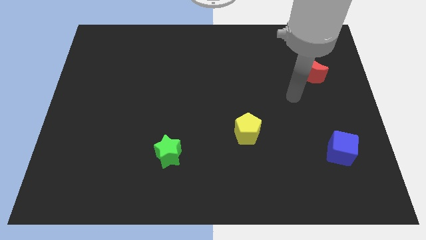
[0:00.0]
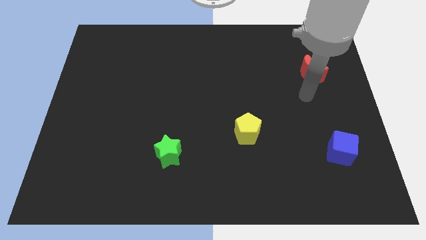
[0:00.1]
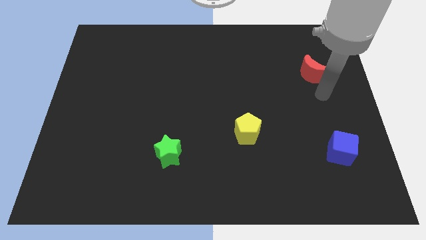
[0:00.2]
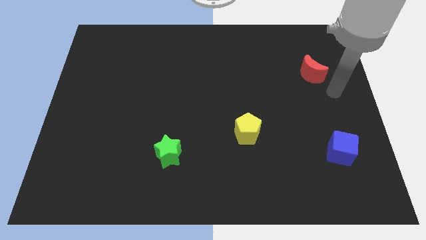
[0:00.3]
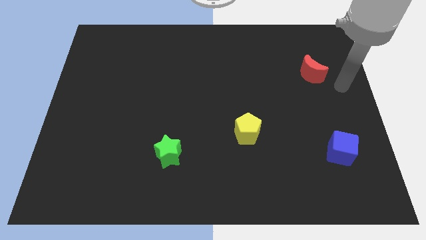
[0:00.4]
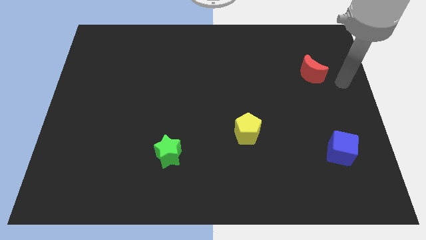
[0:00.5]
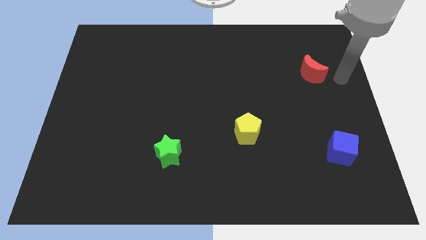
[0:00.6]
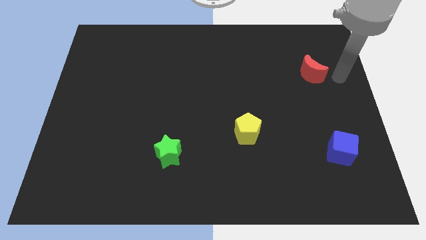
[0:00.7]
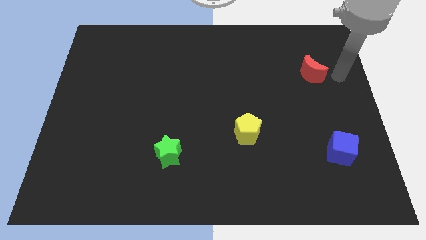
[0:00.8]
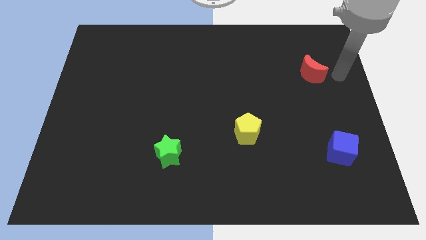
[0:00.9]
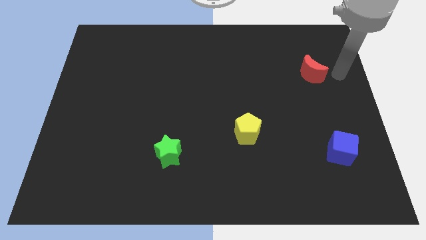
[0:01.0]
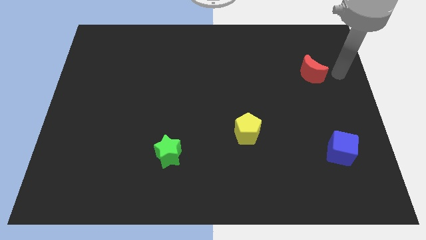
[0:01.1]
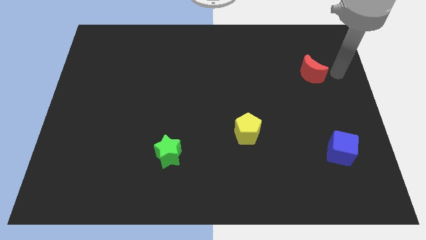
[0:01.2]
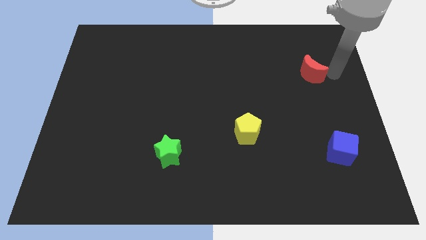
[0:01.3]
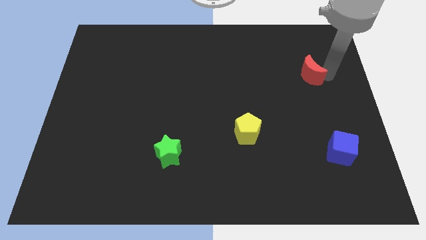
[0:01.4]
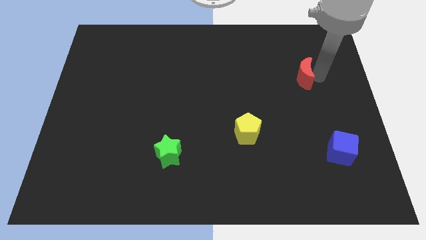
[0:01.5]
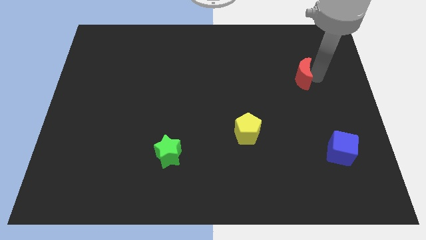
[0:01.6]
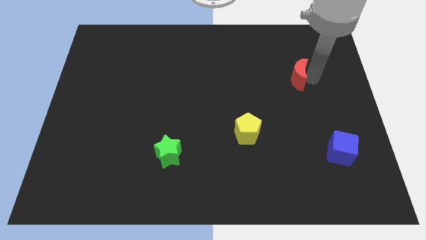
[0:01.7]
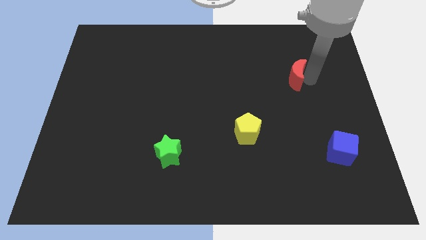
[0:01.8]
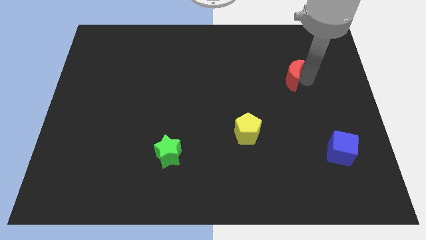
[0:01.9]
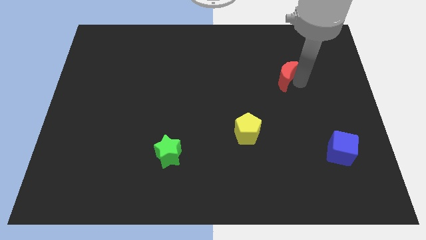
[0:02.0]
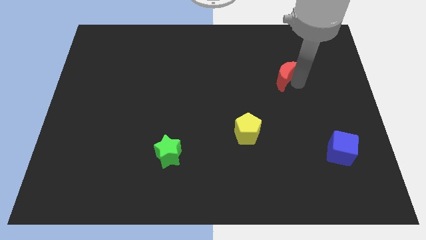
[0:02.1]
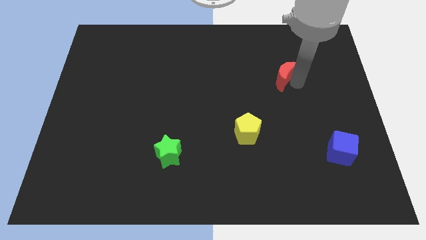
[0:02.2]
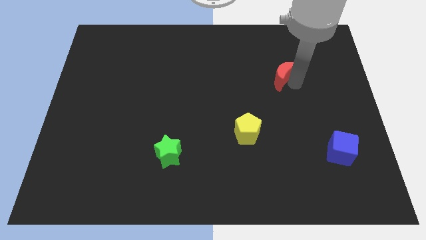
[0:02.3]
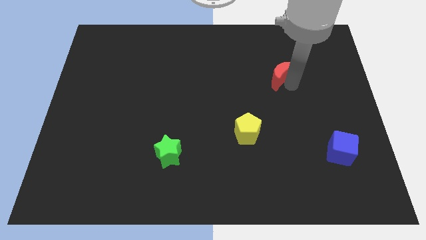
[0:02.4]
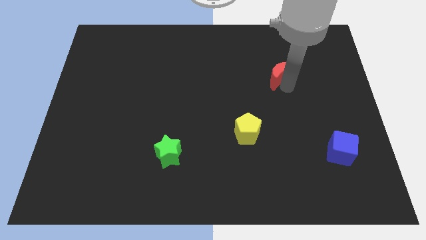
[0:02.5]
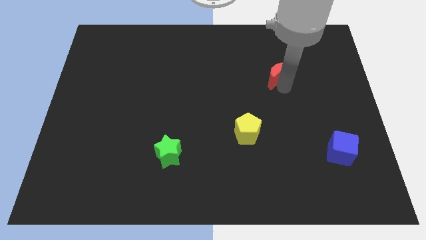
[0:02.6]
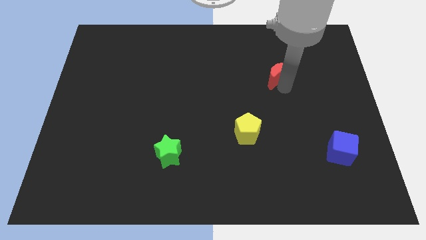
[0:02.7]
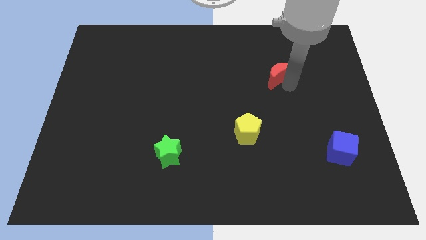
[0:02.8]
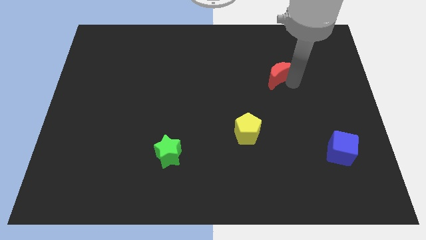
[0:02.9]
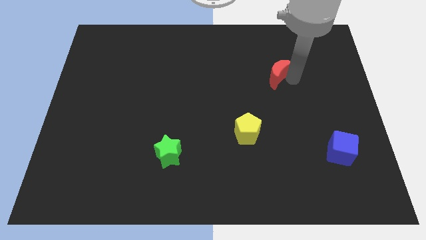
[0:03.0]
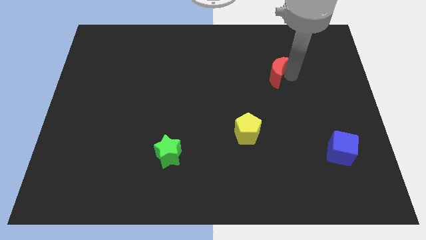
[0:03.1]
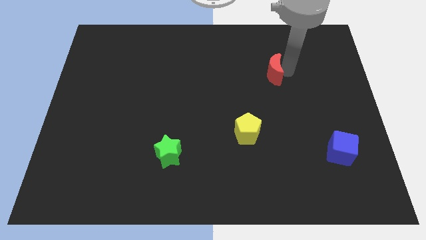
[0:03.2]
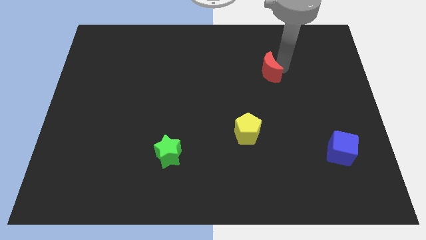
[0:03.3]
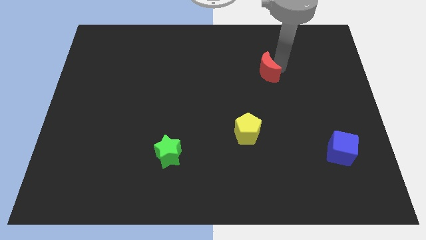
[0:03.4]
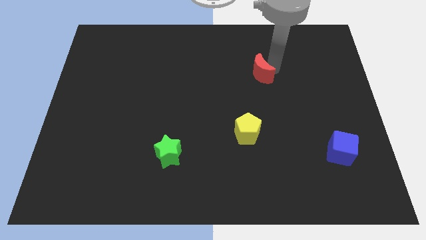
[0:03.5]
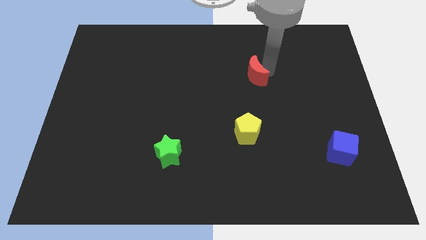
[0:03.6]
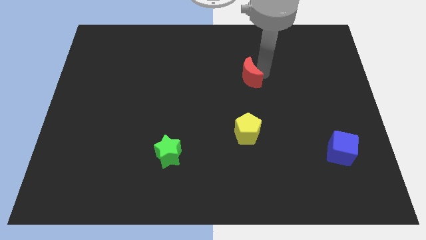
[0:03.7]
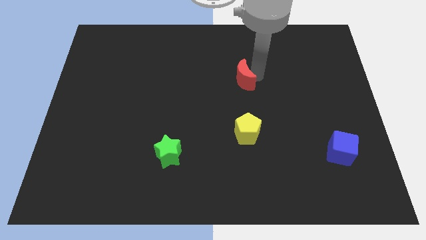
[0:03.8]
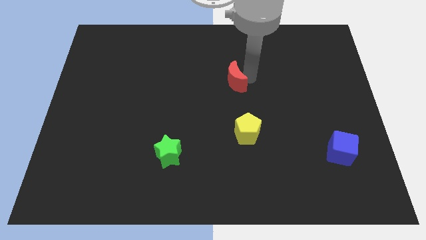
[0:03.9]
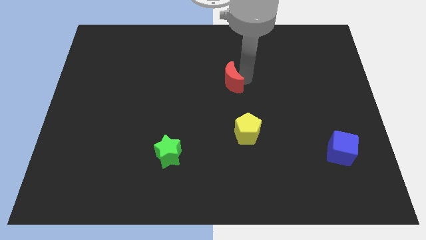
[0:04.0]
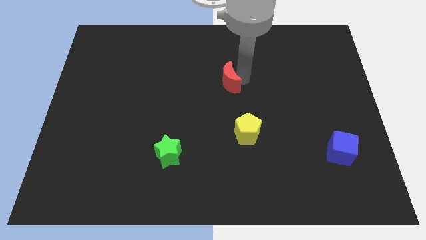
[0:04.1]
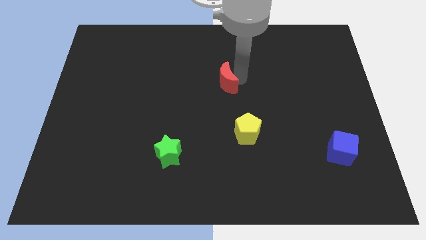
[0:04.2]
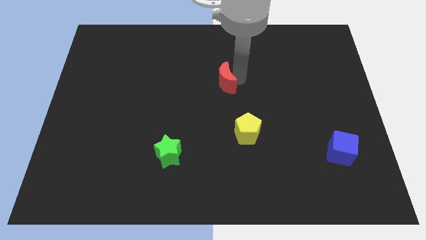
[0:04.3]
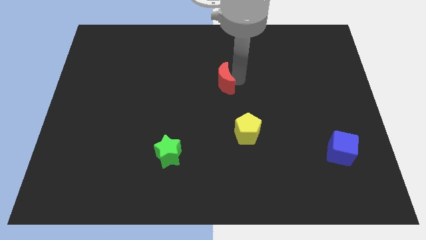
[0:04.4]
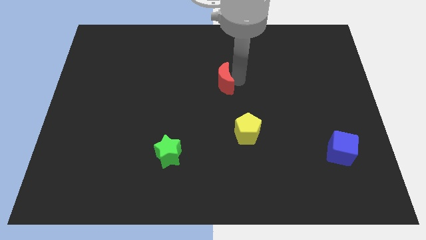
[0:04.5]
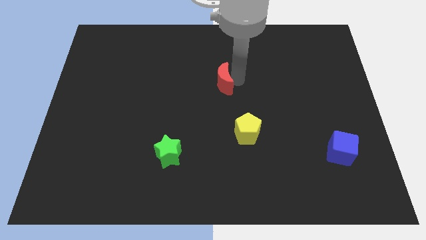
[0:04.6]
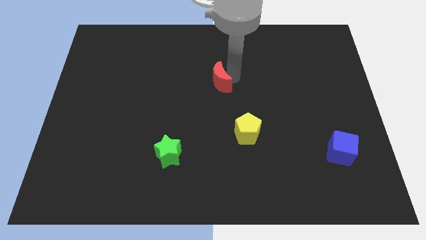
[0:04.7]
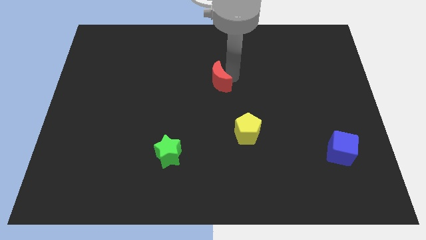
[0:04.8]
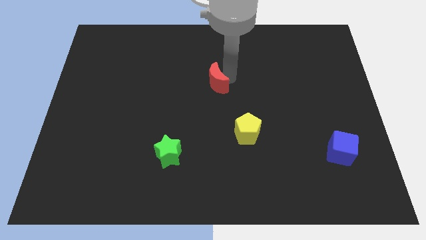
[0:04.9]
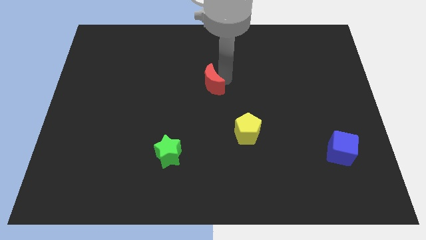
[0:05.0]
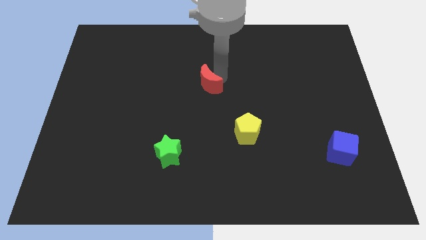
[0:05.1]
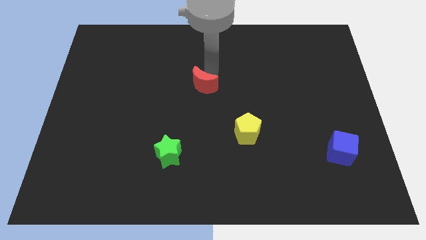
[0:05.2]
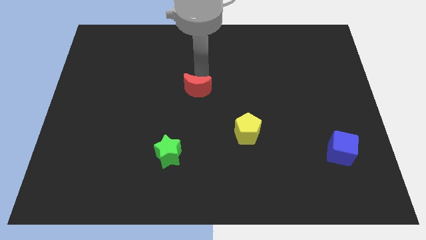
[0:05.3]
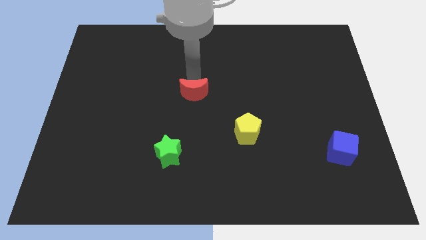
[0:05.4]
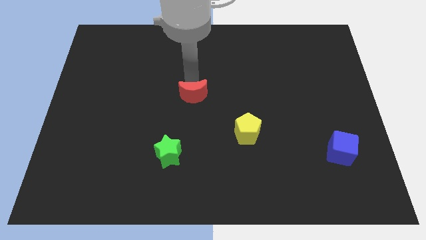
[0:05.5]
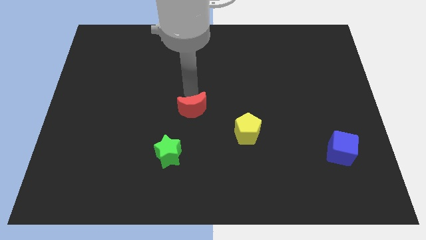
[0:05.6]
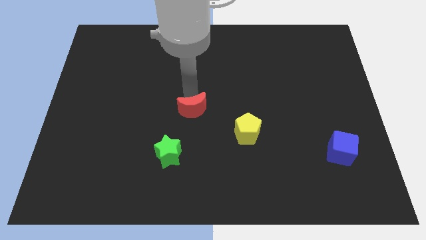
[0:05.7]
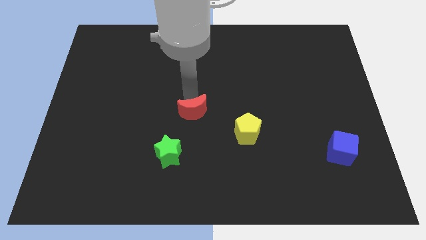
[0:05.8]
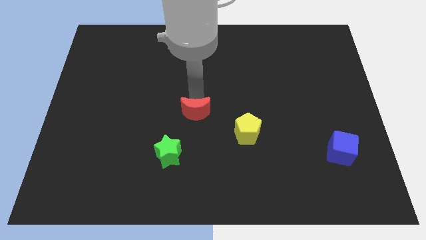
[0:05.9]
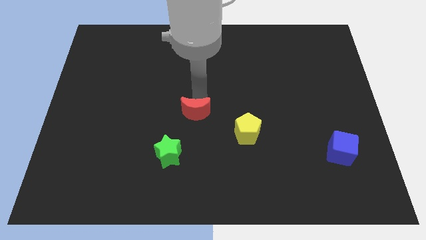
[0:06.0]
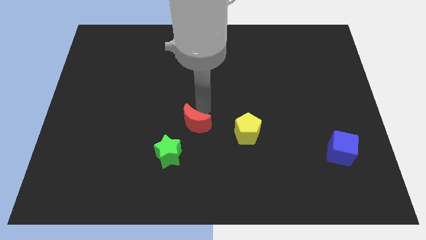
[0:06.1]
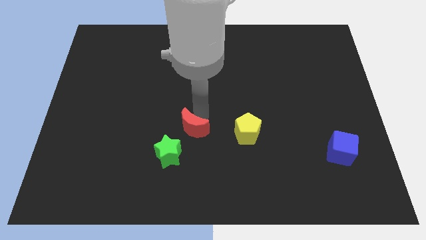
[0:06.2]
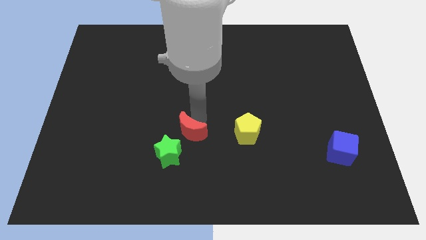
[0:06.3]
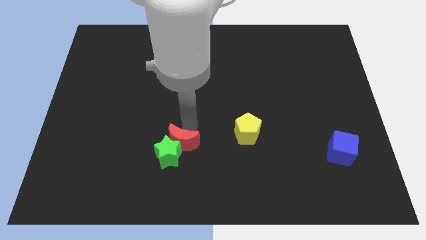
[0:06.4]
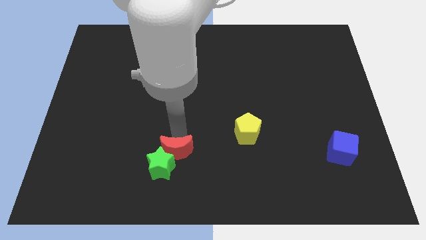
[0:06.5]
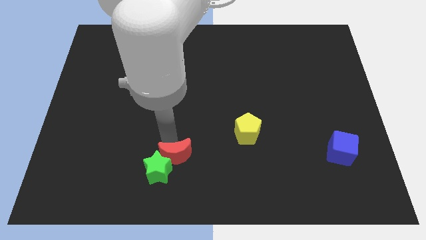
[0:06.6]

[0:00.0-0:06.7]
move the moon towards the green star

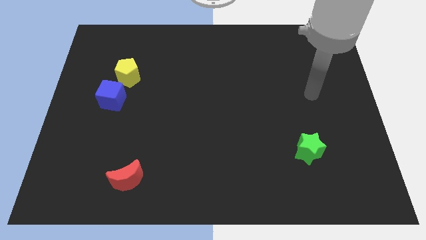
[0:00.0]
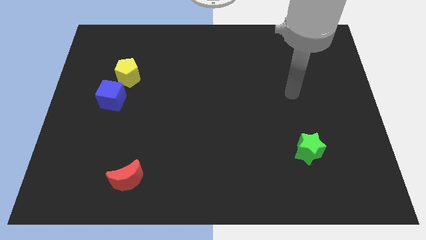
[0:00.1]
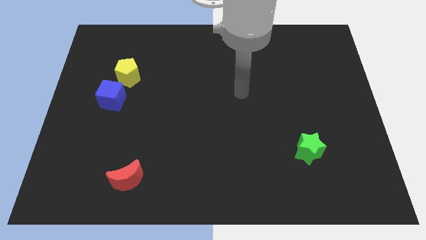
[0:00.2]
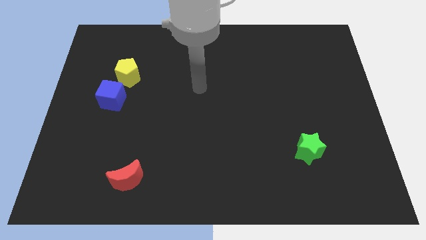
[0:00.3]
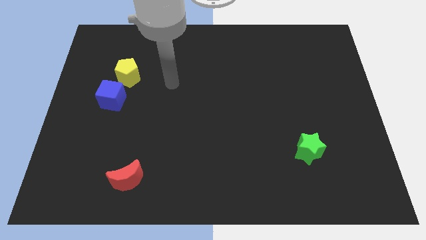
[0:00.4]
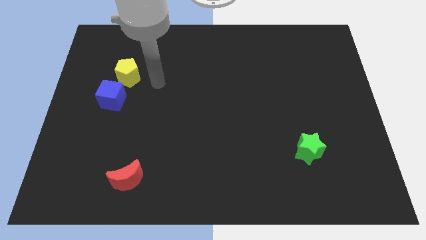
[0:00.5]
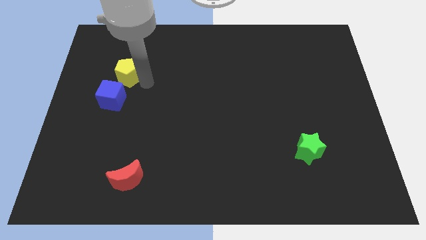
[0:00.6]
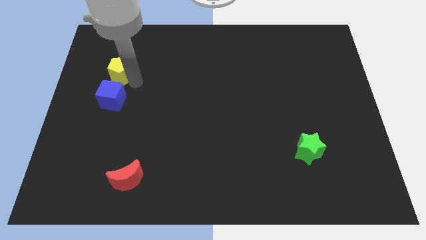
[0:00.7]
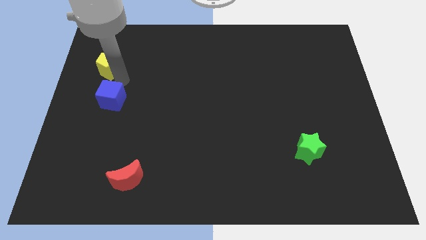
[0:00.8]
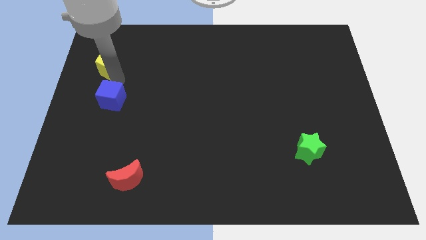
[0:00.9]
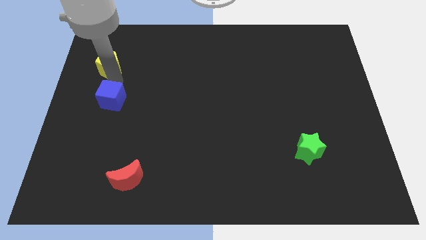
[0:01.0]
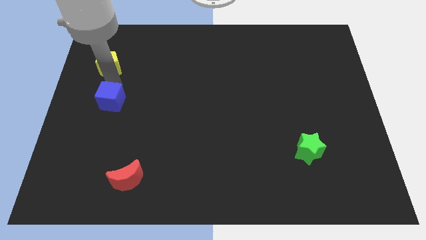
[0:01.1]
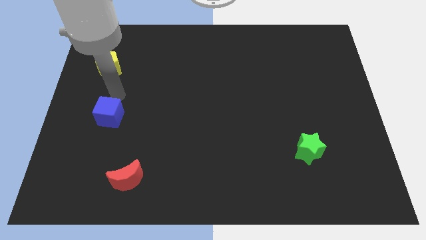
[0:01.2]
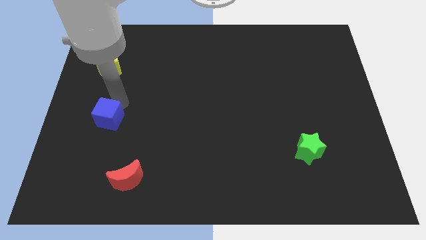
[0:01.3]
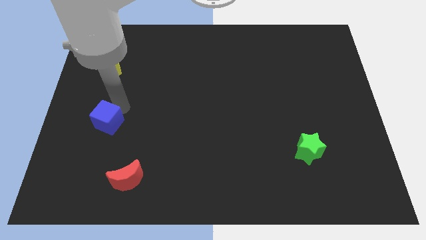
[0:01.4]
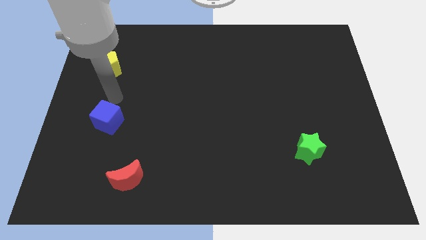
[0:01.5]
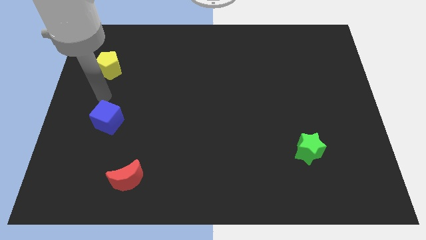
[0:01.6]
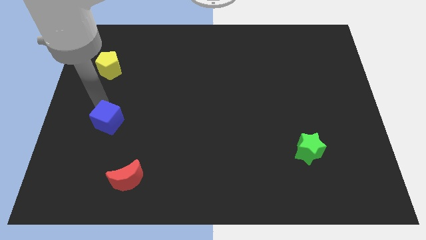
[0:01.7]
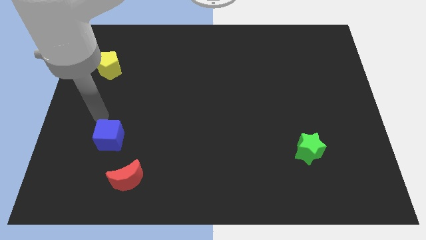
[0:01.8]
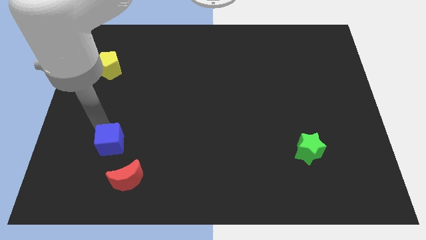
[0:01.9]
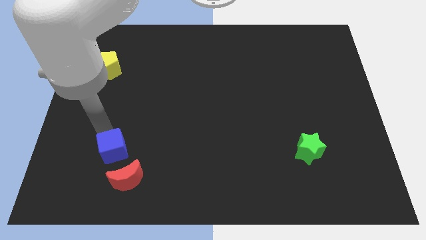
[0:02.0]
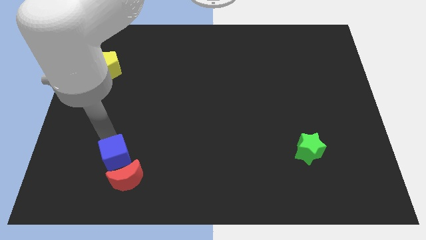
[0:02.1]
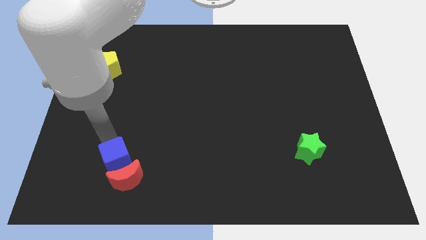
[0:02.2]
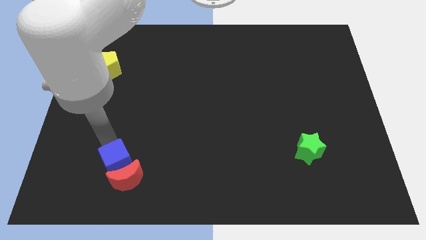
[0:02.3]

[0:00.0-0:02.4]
put the blue block next to the red block
